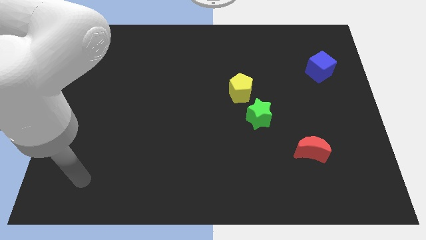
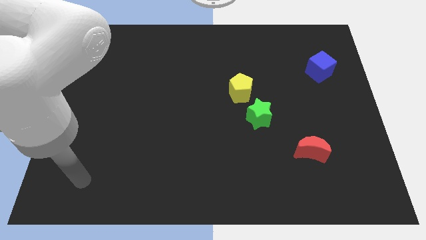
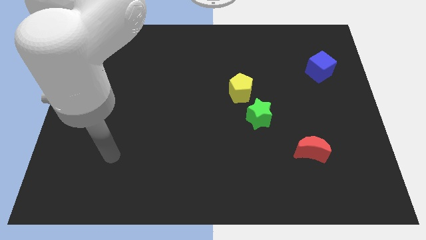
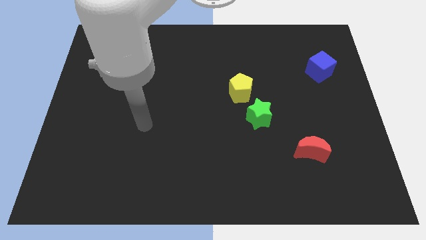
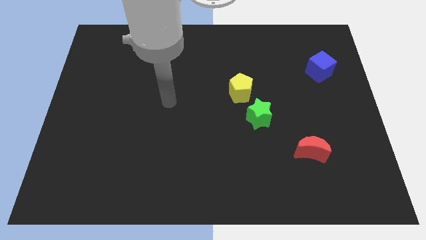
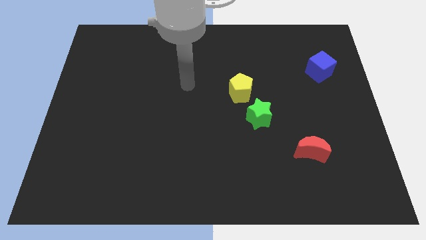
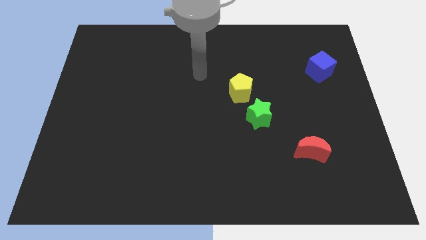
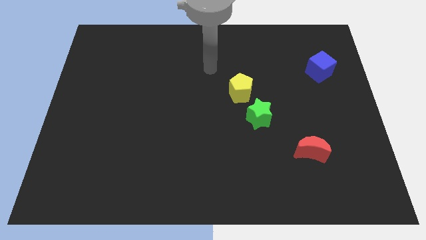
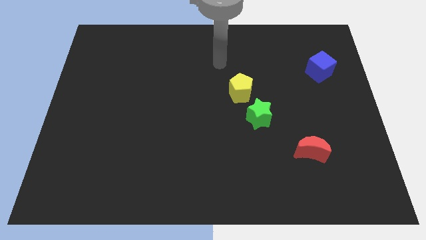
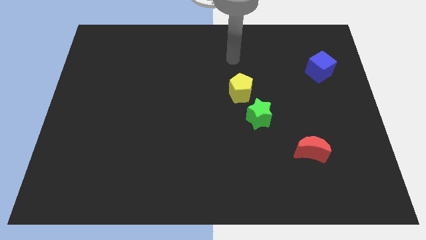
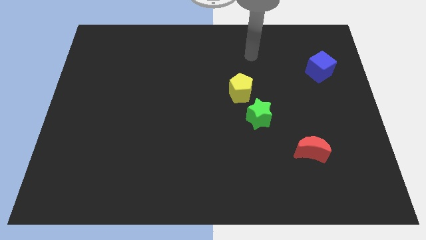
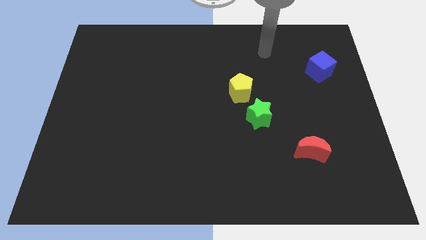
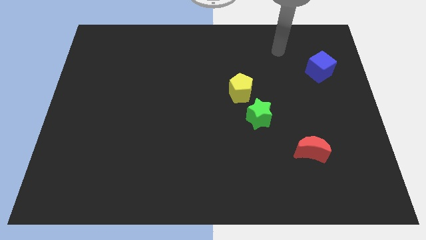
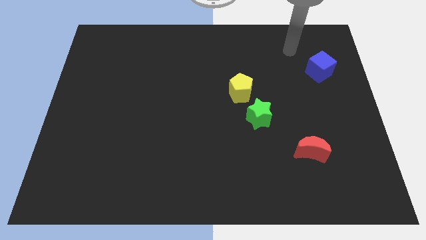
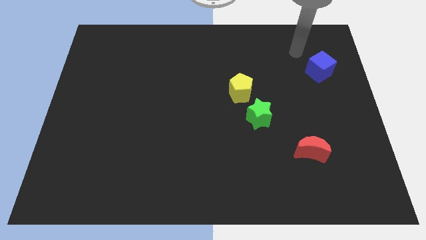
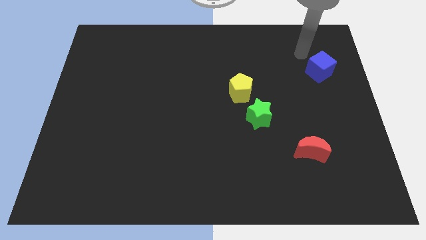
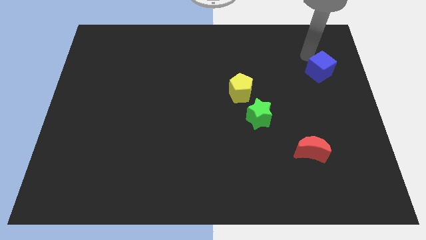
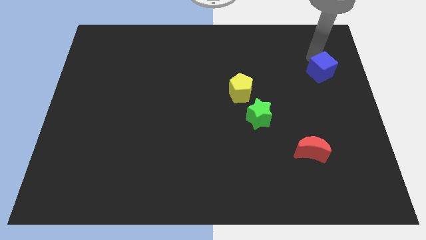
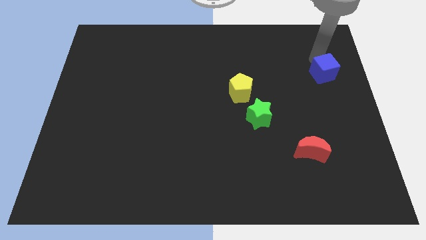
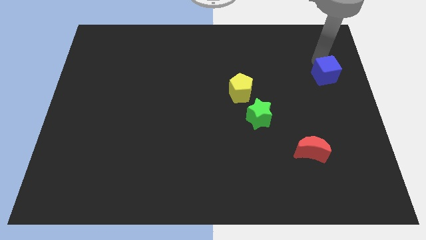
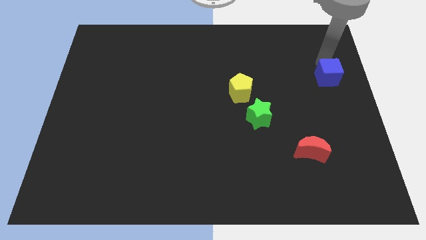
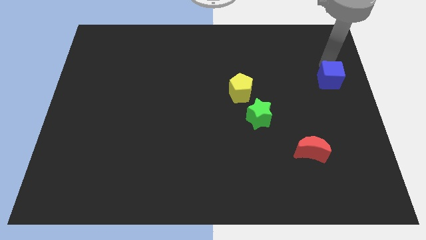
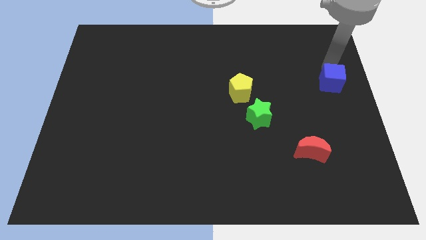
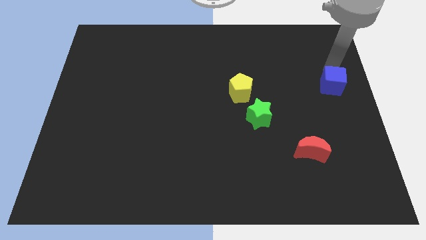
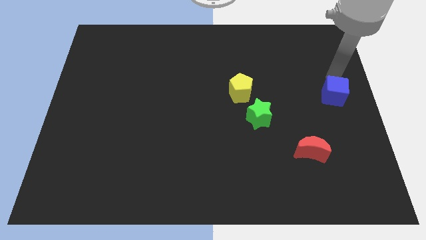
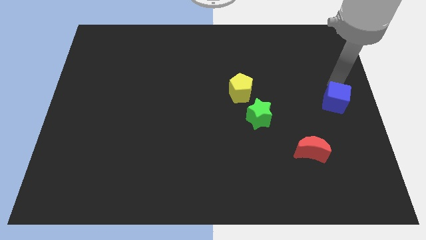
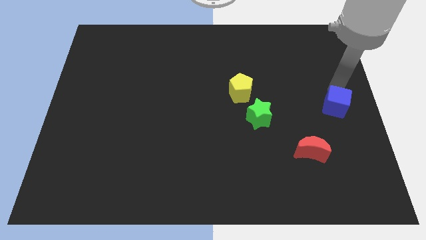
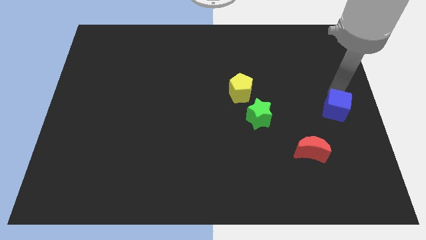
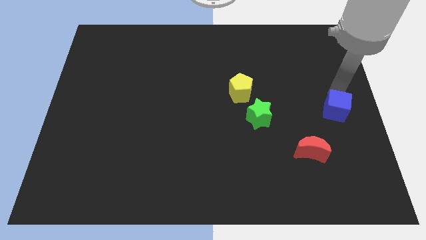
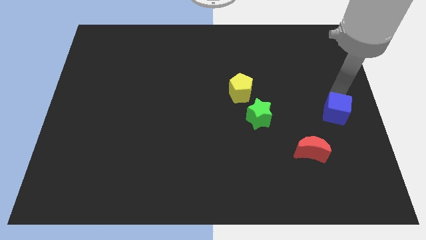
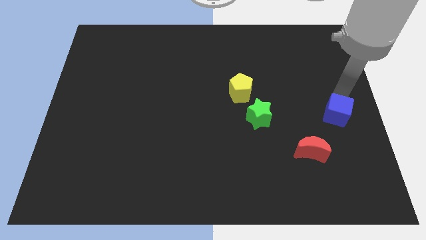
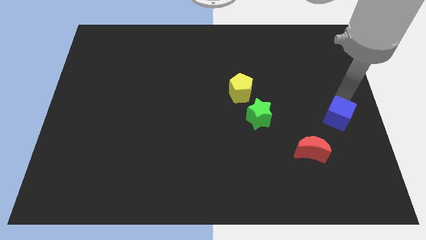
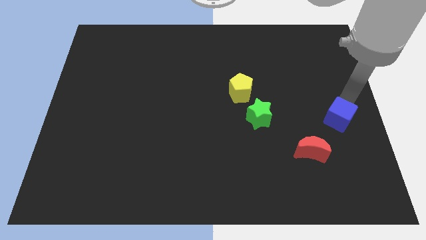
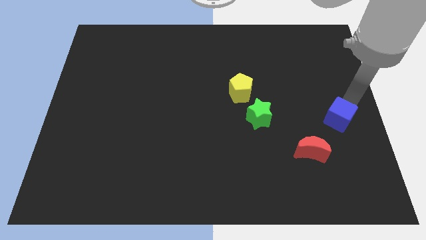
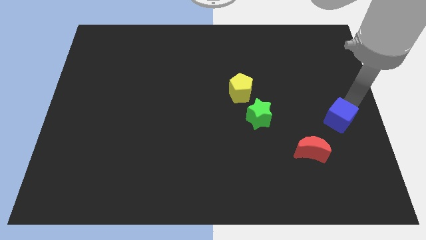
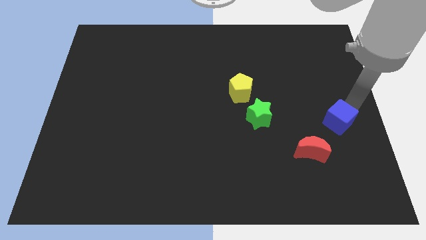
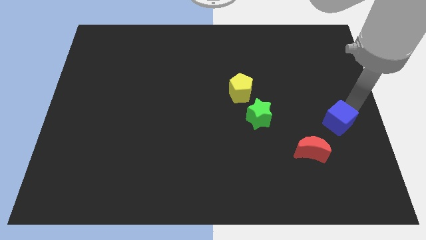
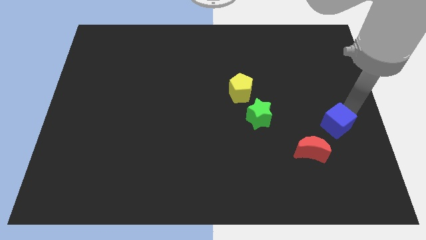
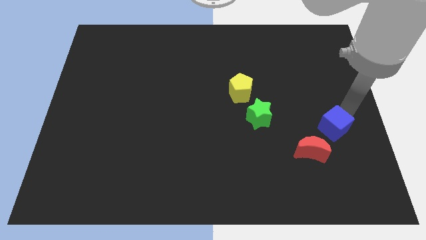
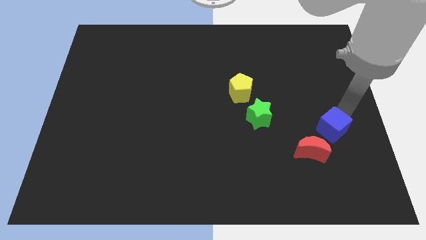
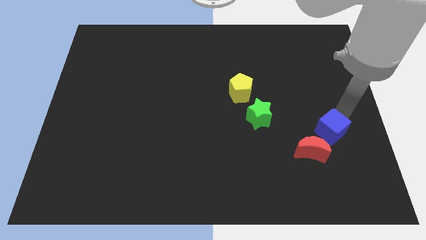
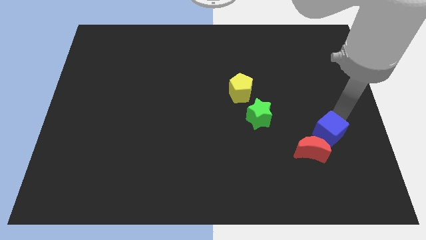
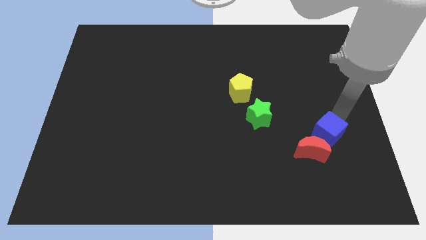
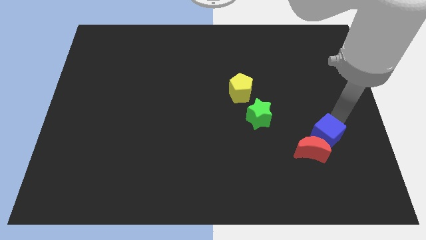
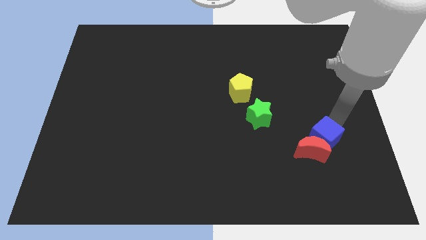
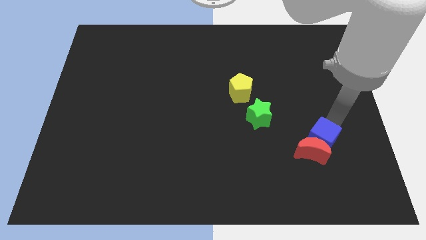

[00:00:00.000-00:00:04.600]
push the blue block to the red moon

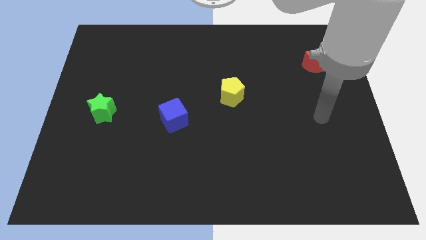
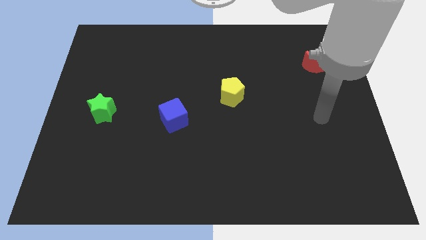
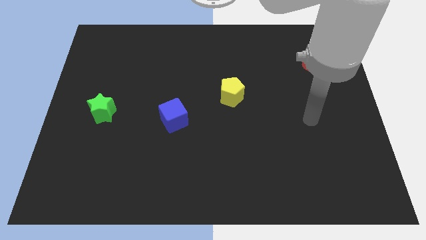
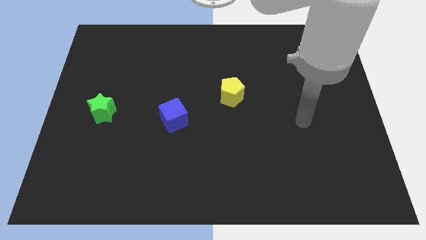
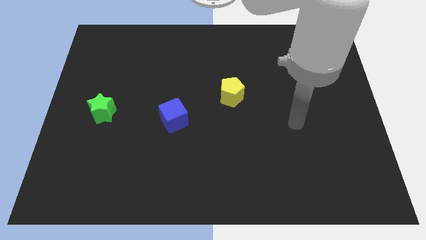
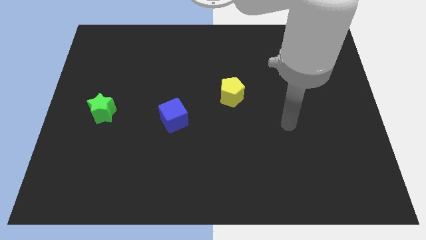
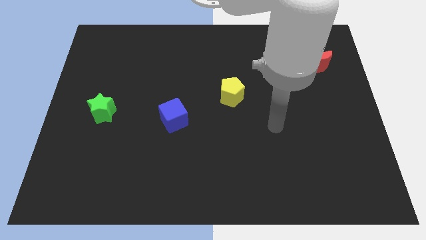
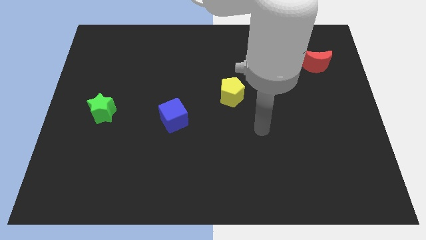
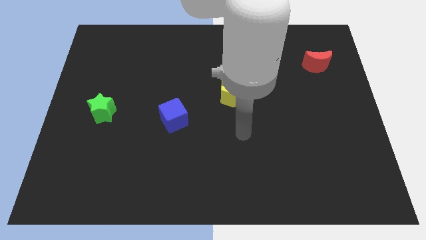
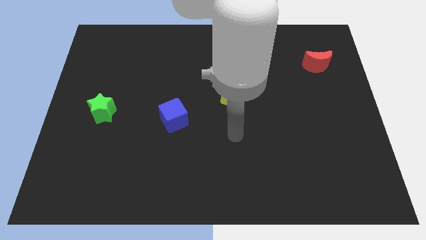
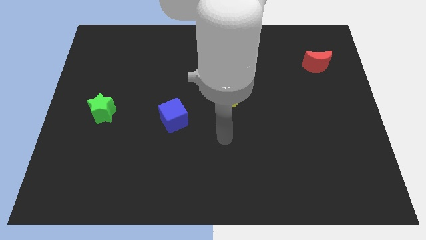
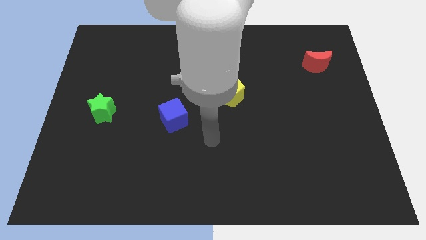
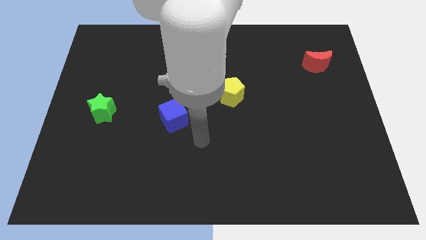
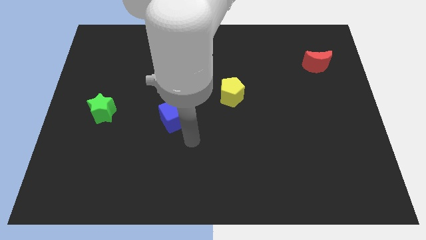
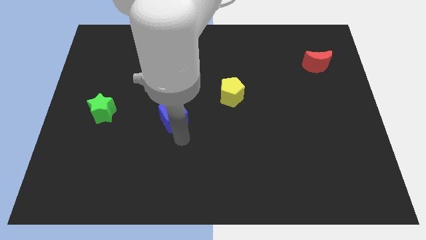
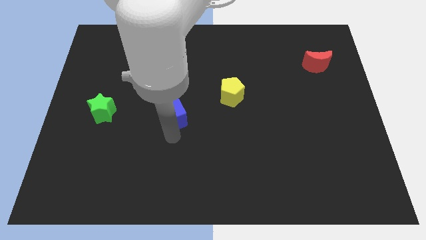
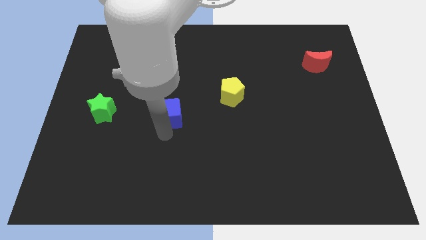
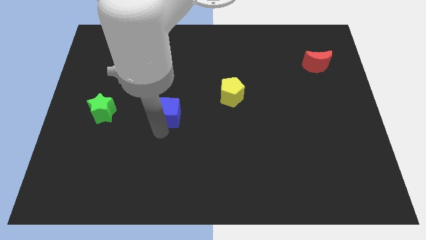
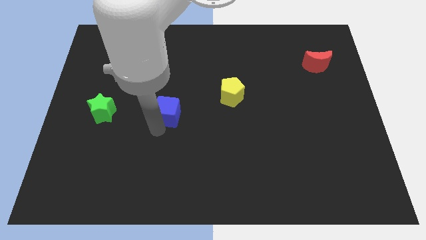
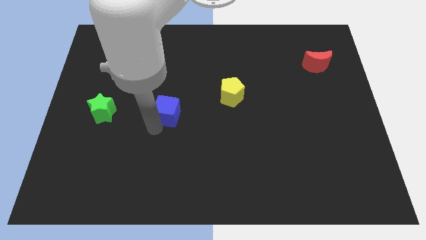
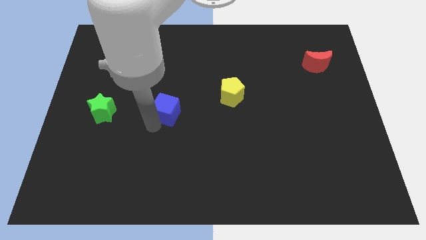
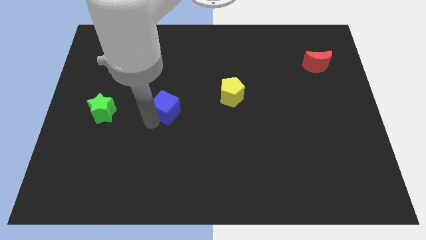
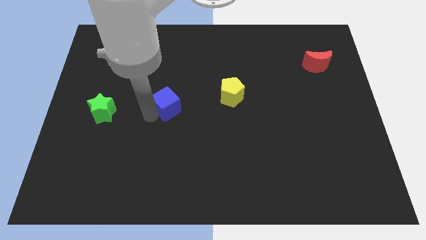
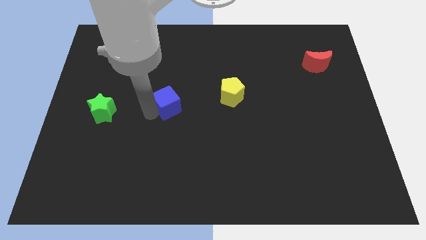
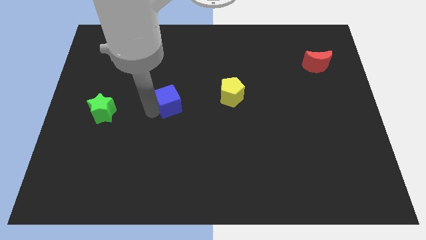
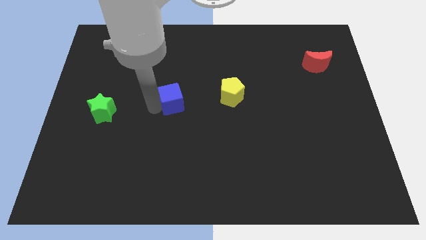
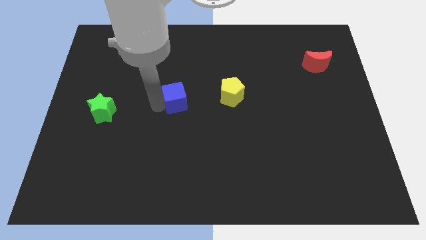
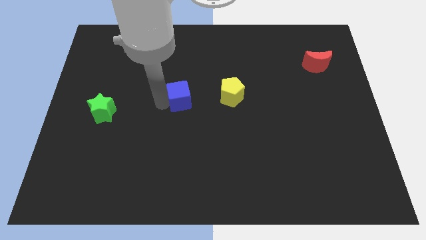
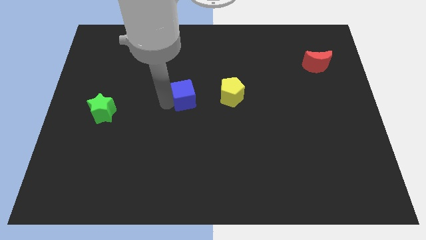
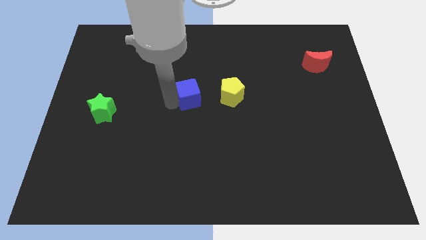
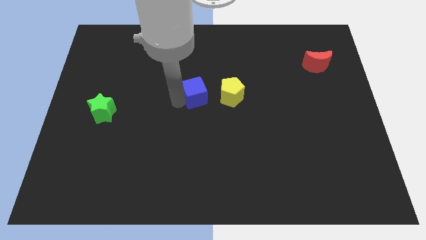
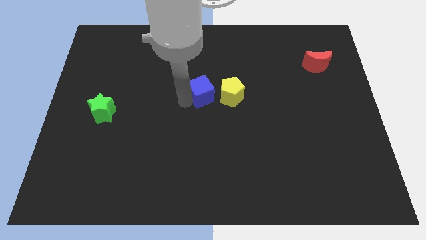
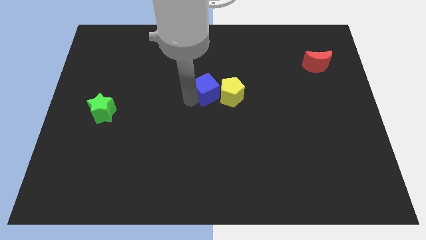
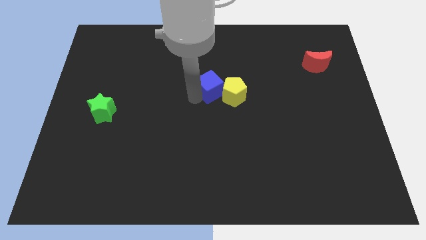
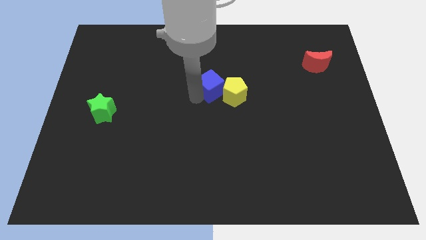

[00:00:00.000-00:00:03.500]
slide the cube close to the pentagon

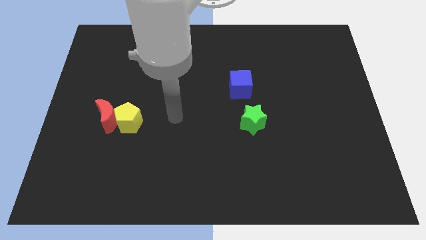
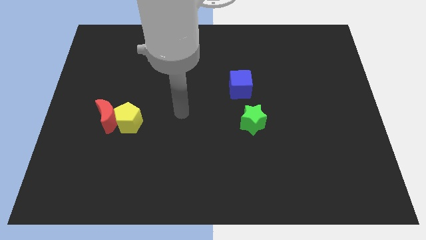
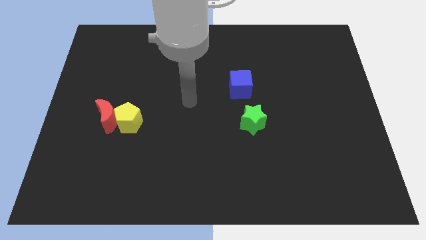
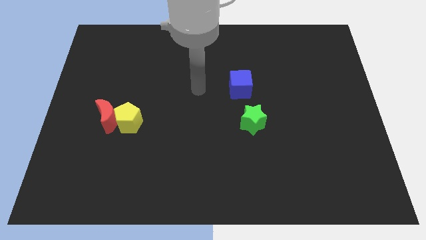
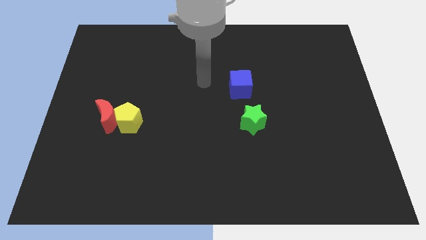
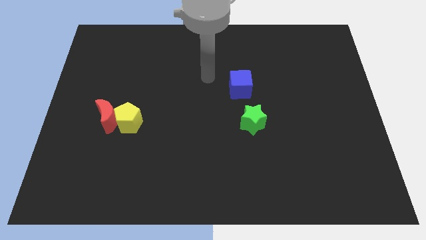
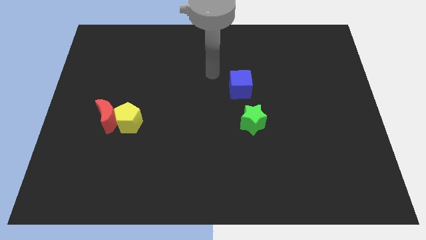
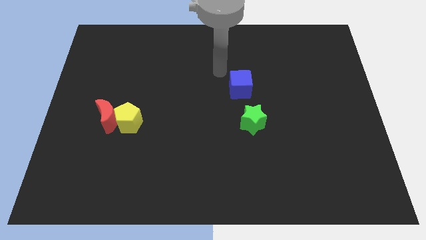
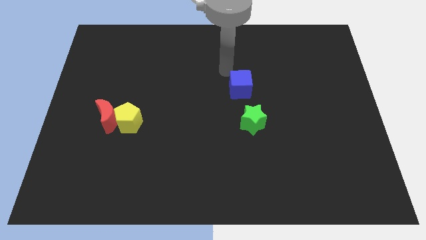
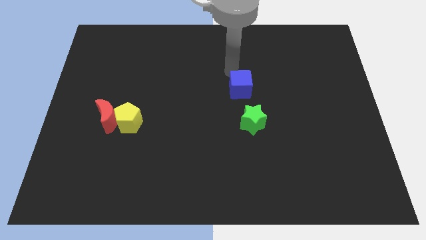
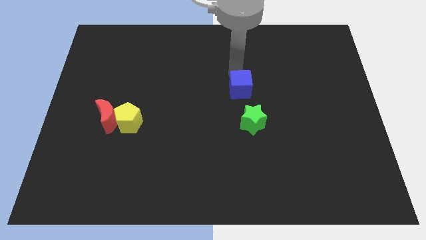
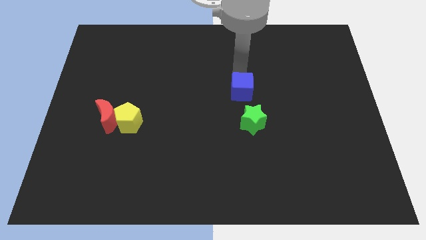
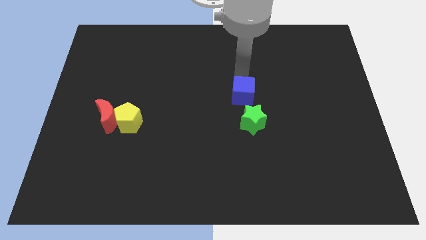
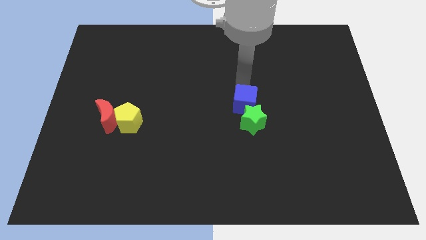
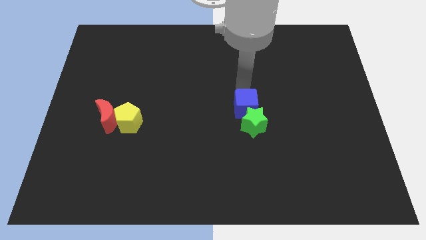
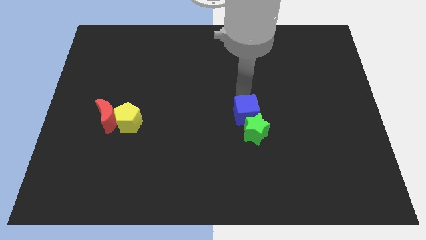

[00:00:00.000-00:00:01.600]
slide the blue block next to the star
